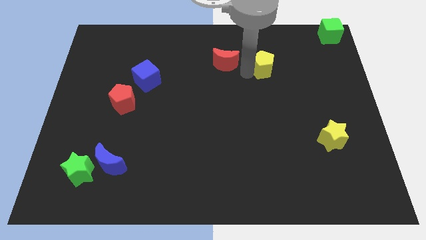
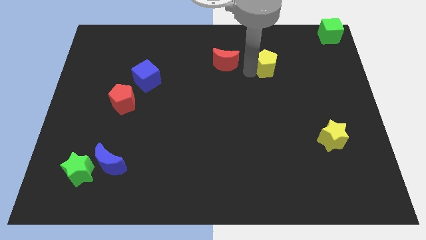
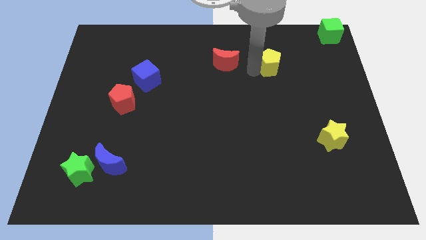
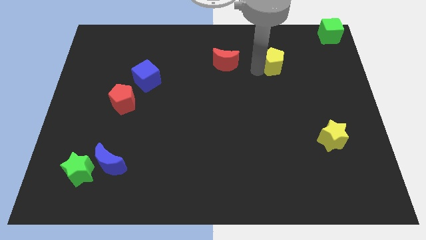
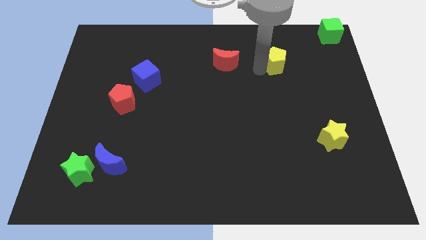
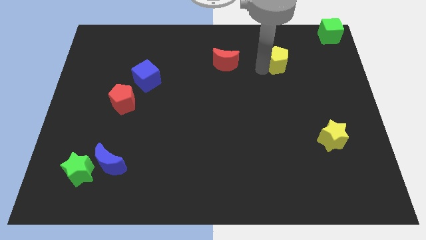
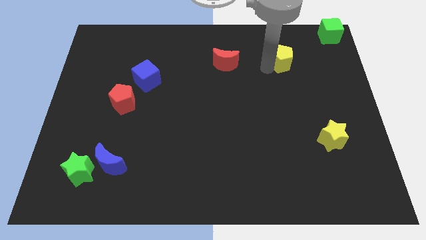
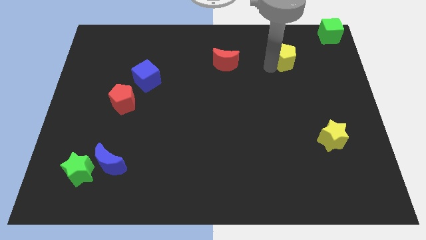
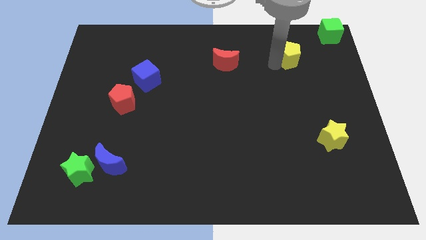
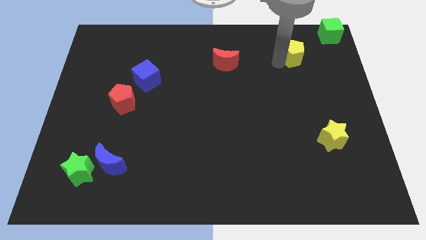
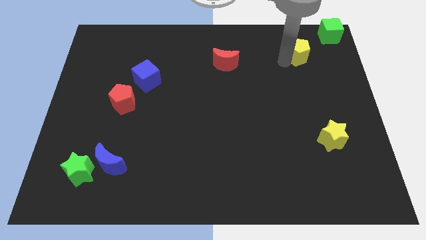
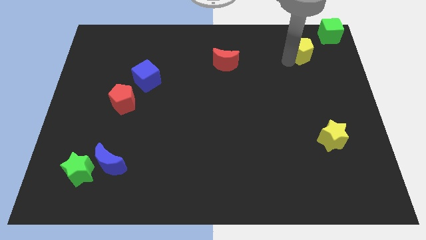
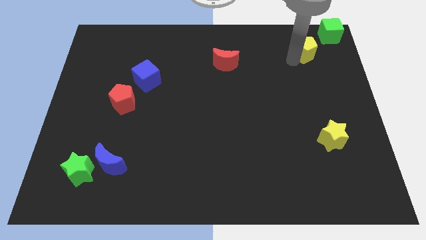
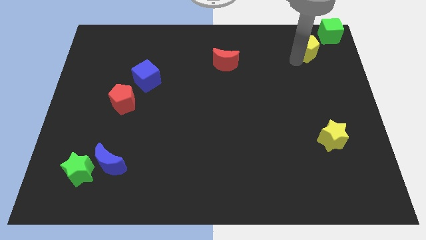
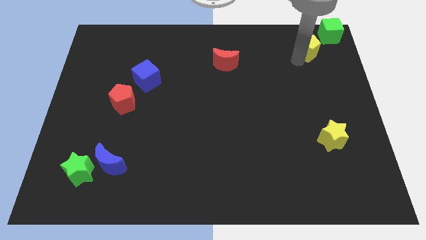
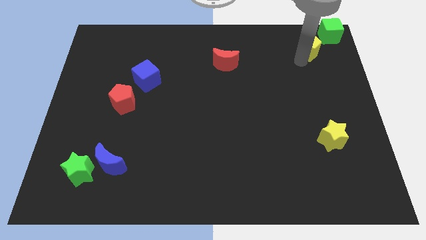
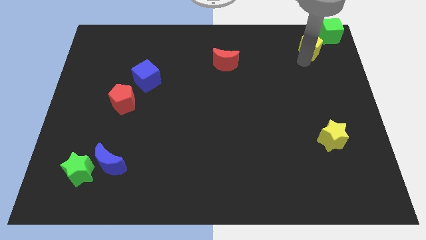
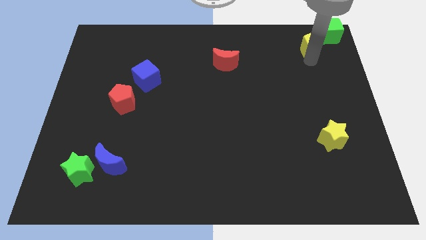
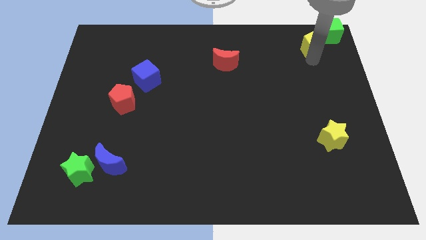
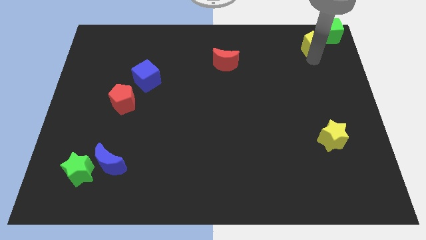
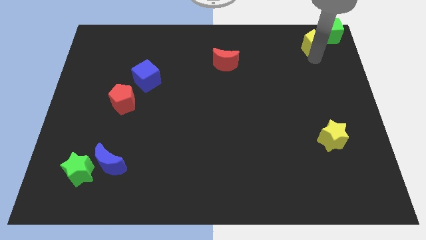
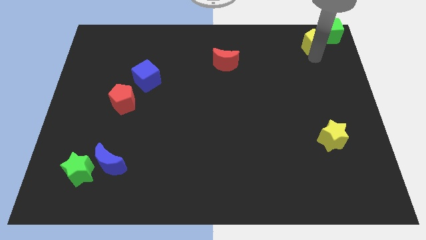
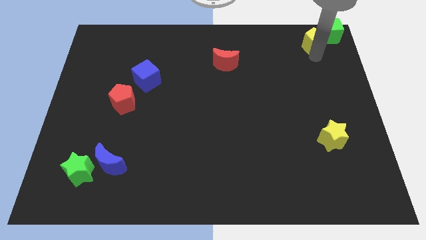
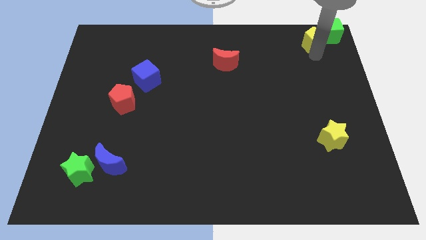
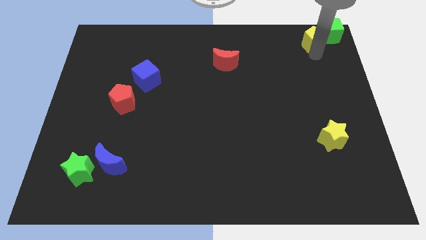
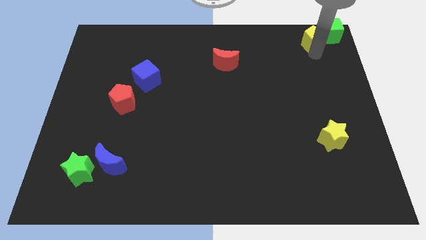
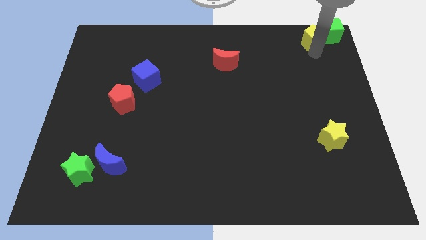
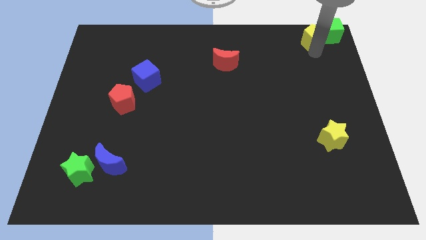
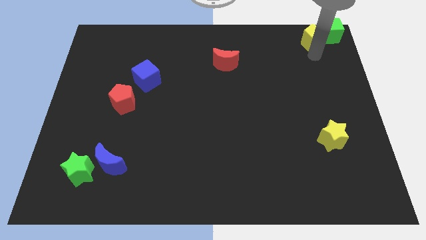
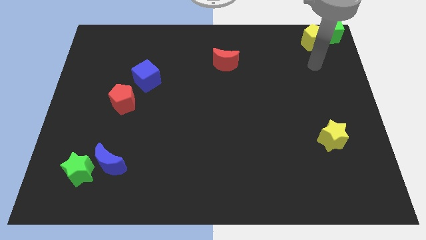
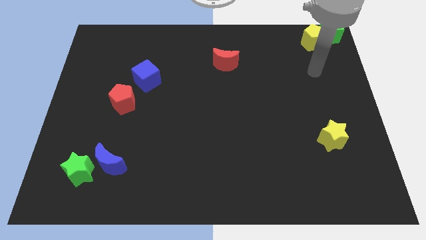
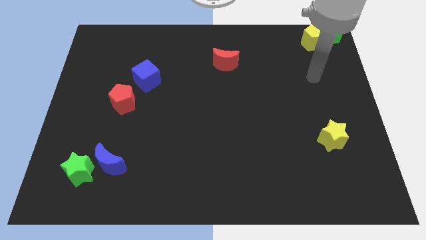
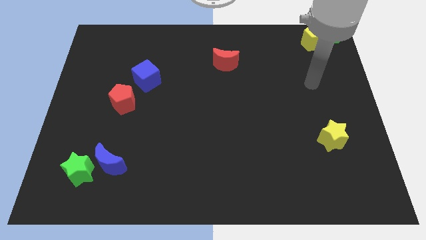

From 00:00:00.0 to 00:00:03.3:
move the yellow pentagon to the bottom left side of the green cube

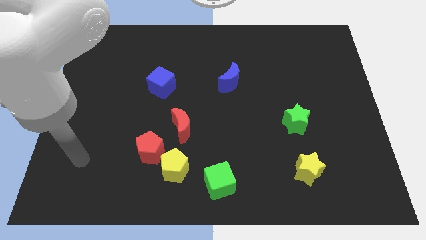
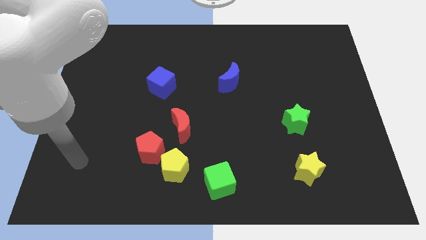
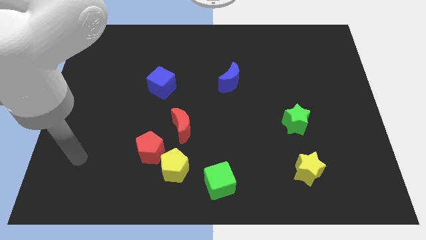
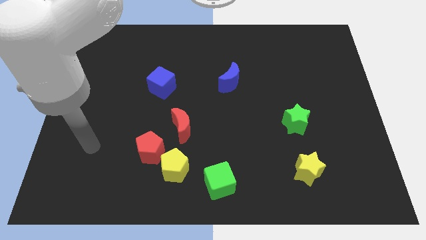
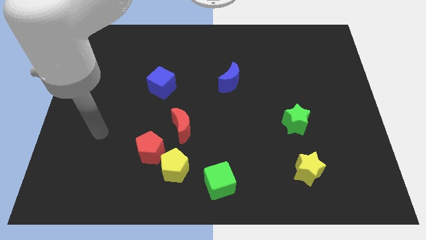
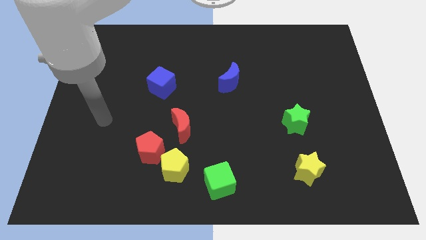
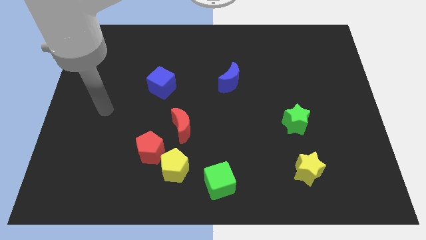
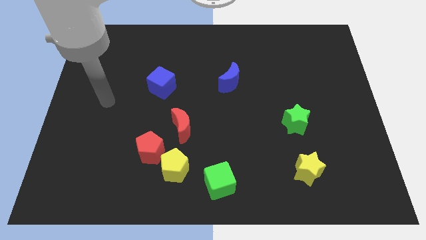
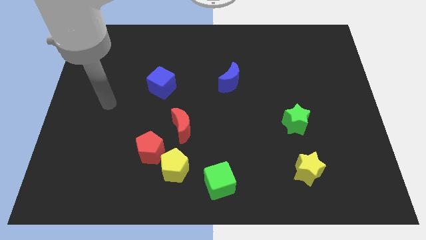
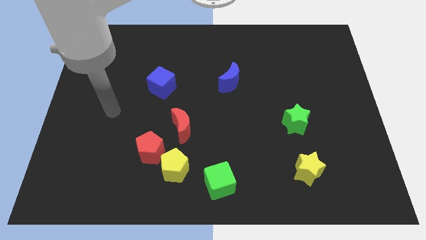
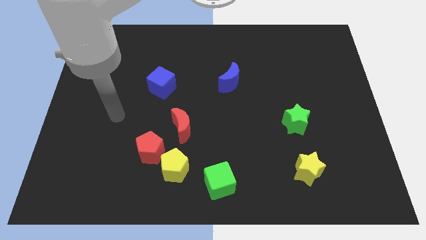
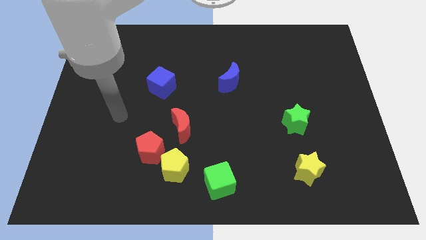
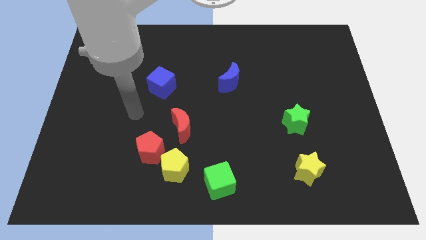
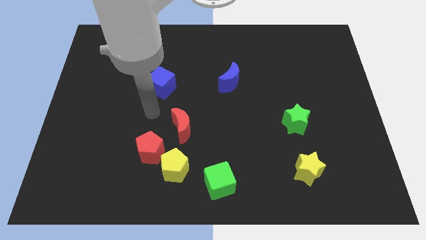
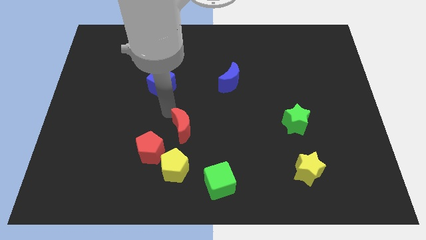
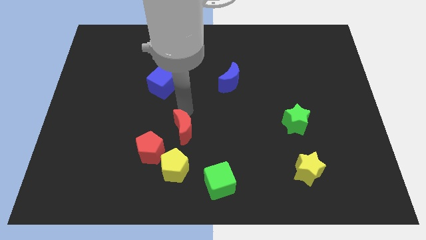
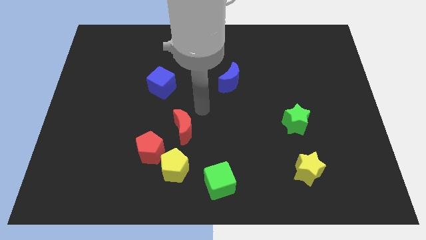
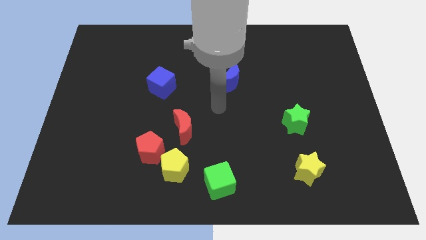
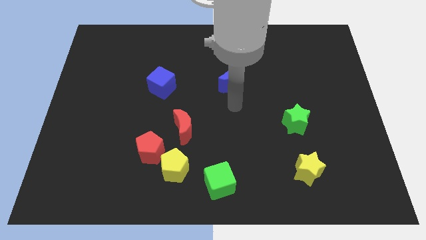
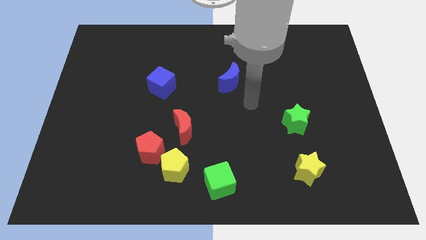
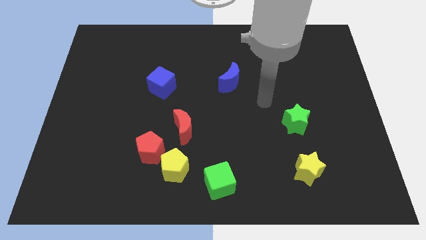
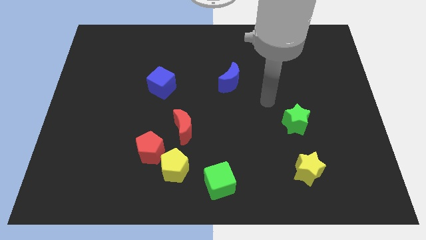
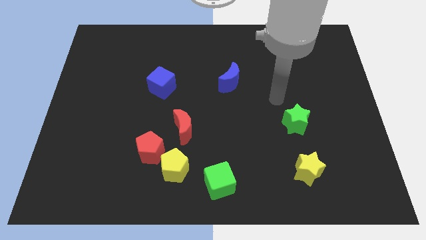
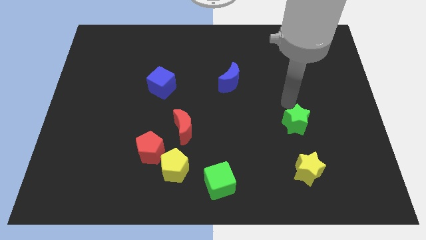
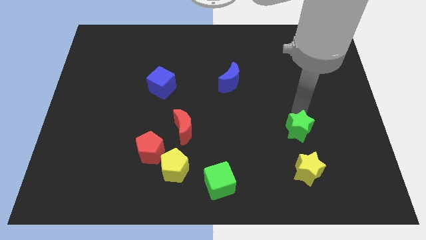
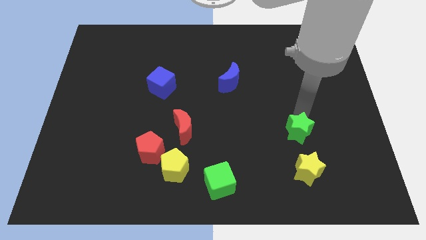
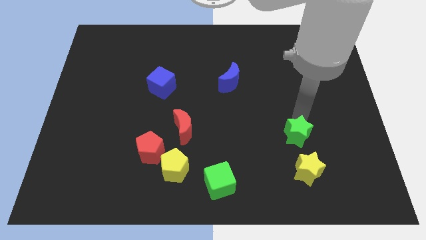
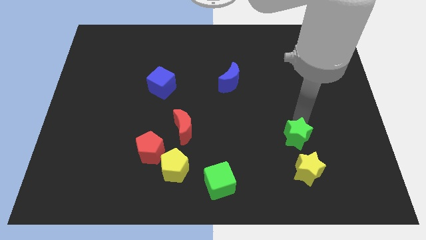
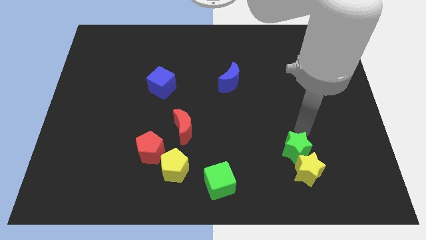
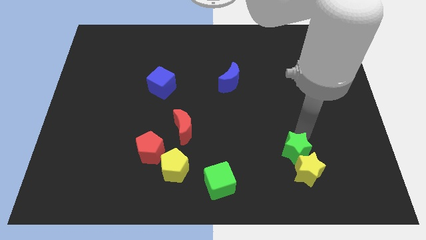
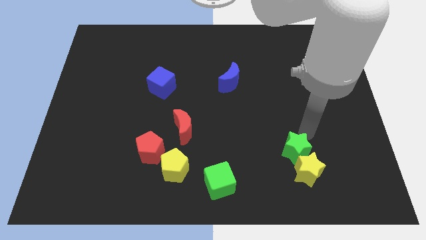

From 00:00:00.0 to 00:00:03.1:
slide green star into yellow star

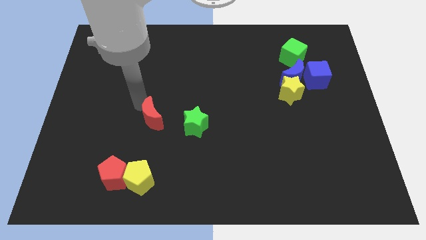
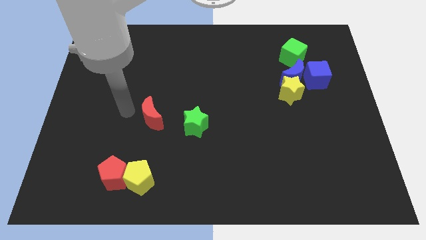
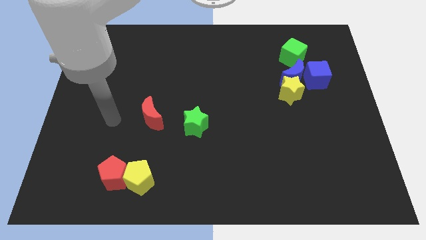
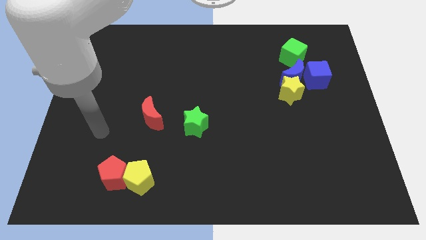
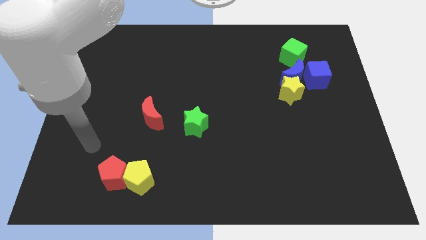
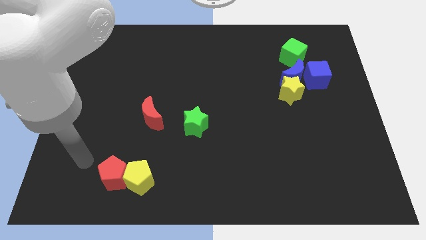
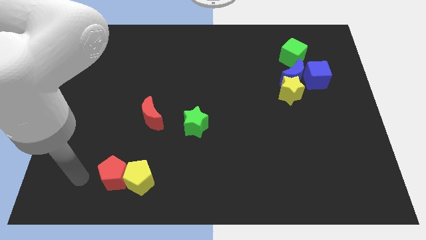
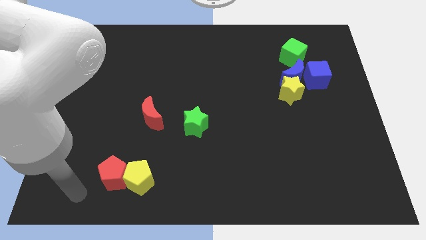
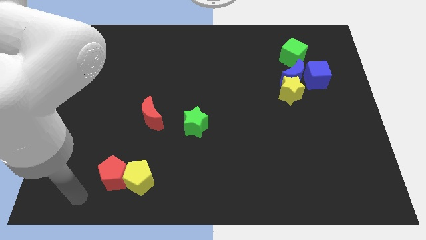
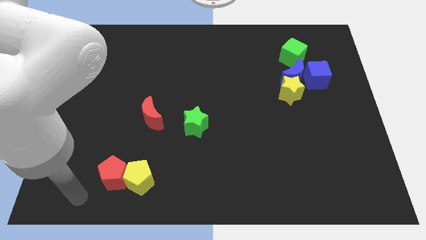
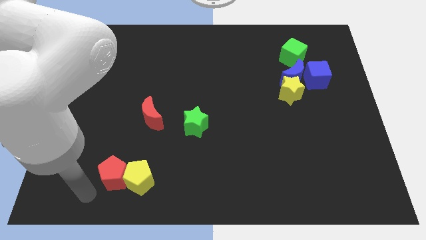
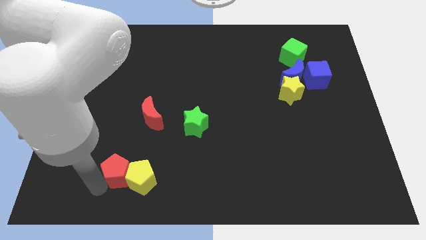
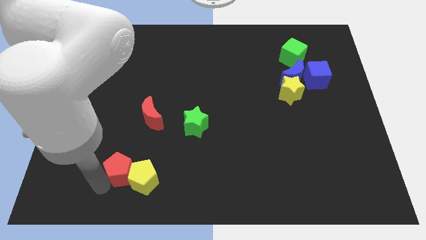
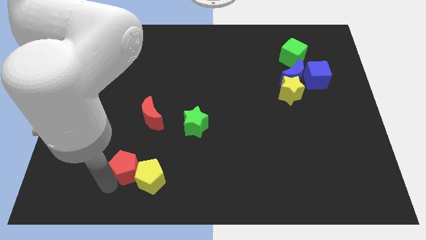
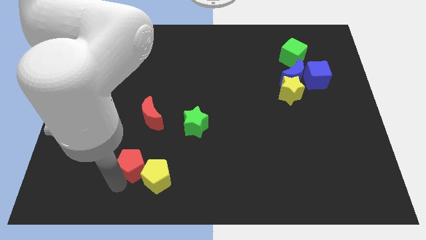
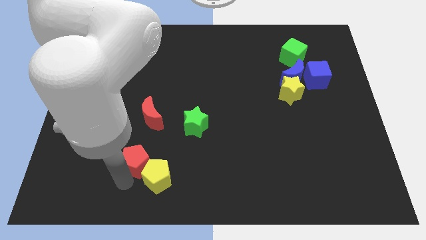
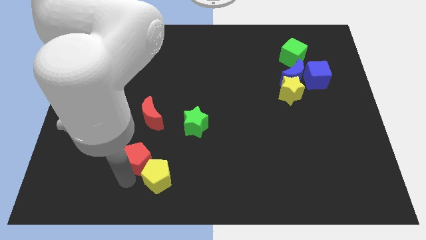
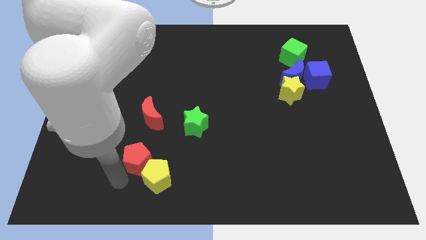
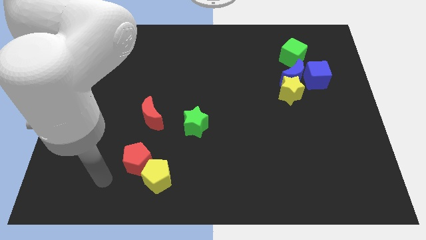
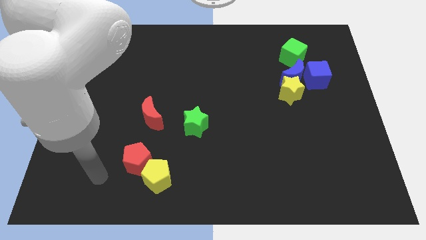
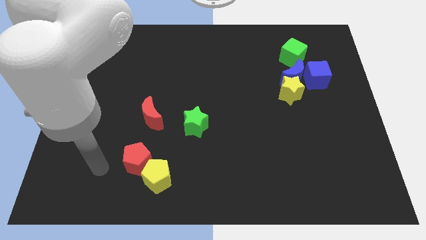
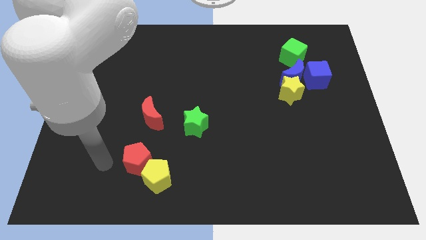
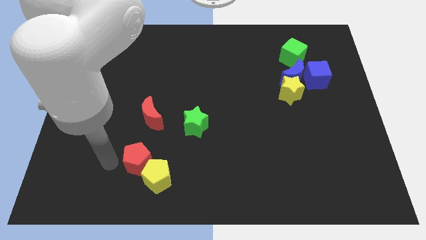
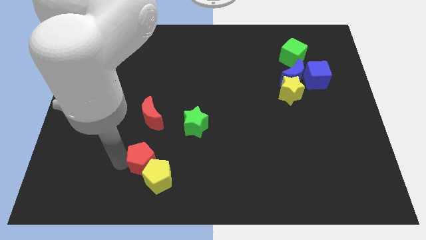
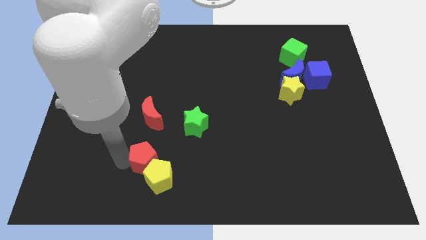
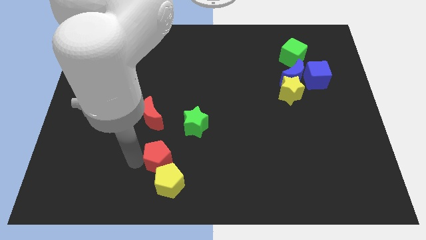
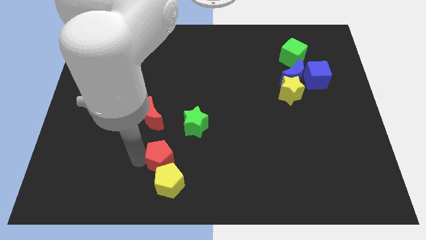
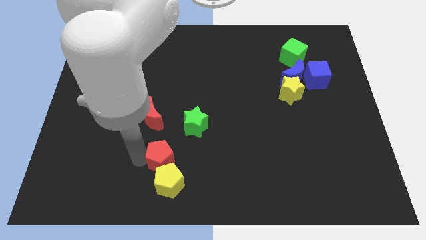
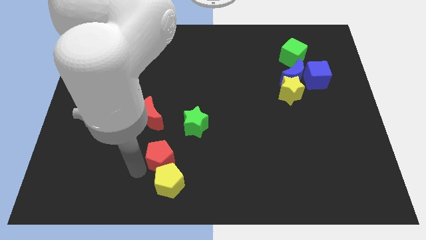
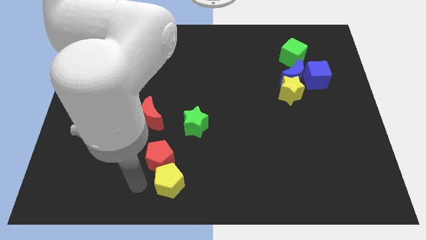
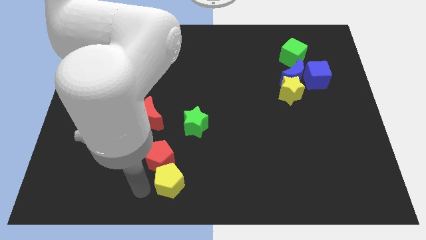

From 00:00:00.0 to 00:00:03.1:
put the red pentagon underneath the red crescent
